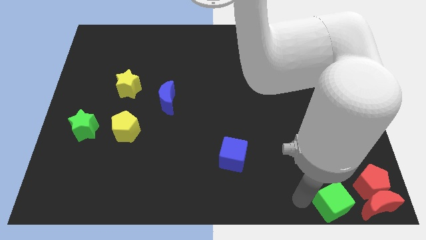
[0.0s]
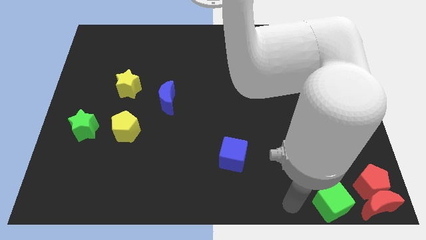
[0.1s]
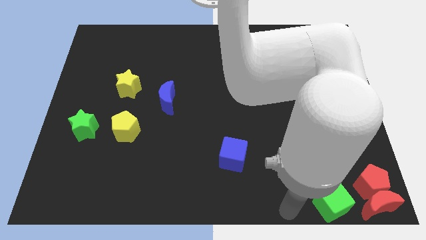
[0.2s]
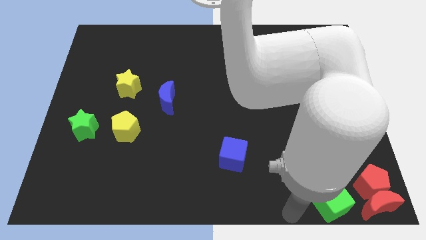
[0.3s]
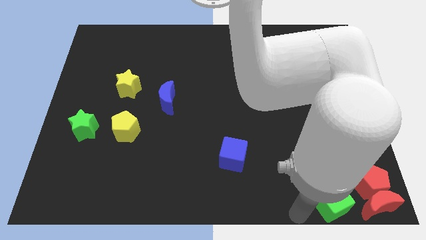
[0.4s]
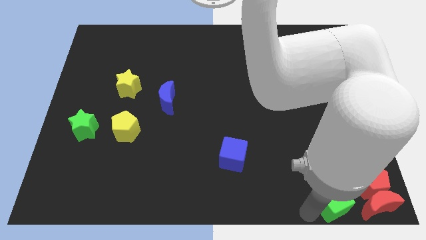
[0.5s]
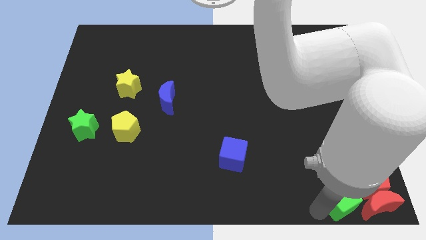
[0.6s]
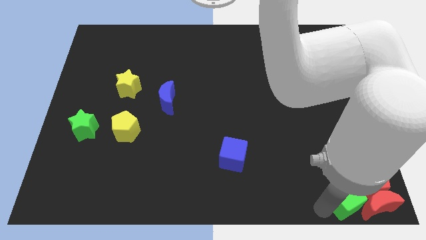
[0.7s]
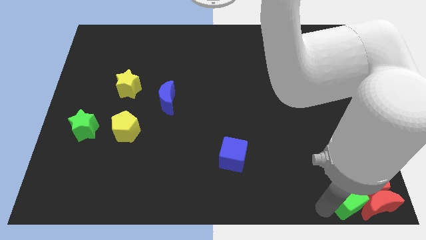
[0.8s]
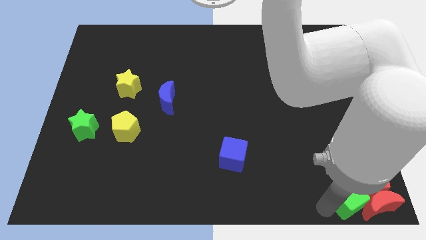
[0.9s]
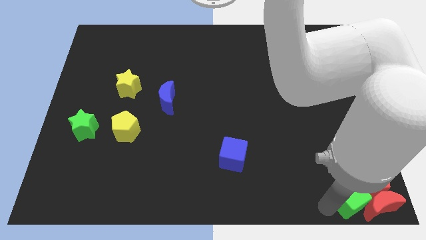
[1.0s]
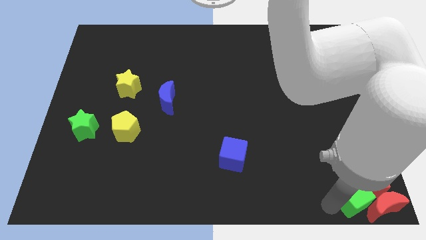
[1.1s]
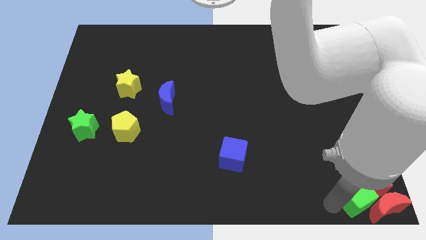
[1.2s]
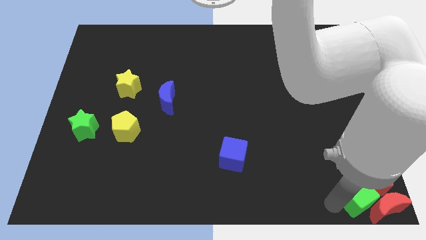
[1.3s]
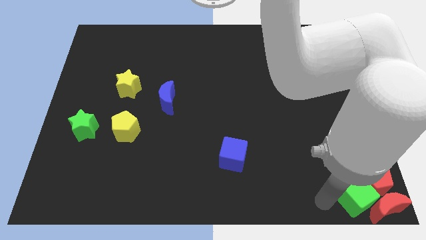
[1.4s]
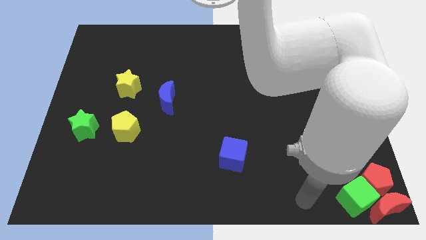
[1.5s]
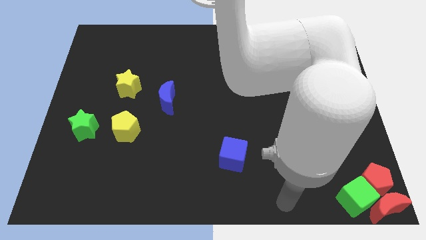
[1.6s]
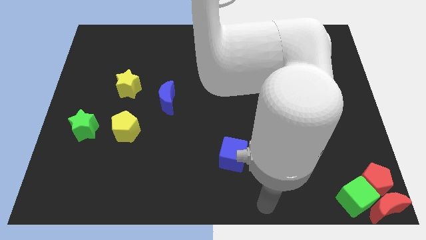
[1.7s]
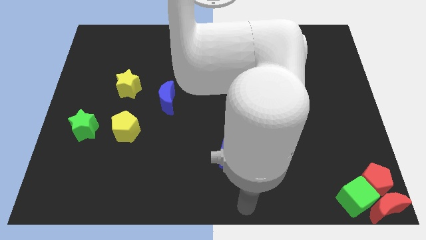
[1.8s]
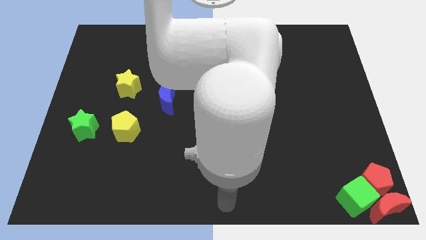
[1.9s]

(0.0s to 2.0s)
push the green cube into the red blocks

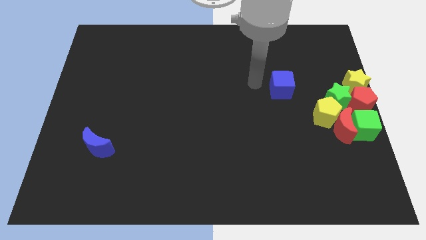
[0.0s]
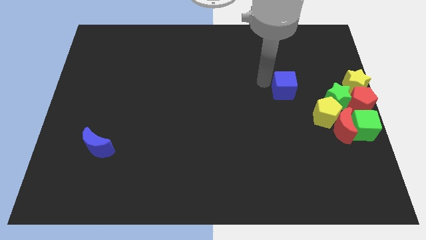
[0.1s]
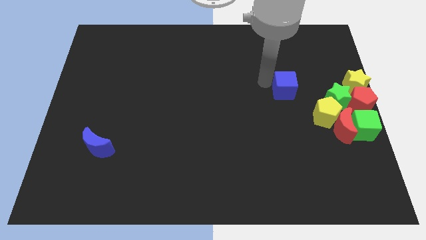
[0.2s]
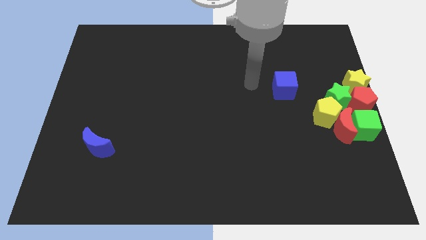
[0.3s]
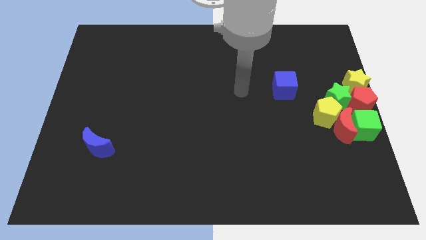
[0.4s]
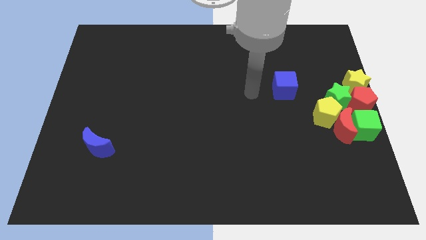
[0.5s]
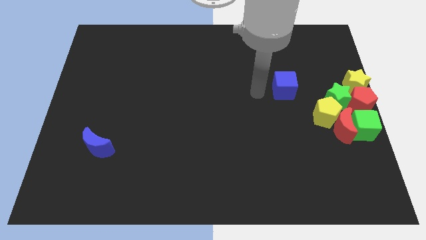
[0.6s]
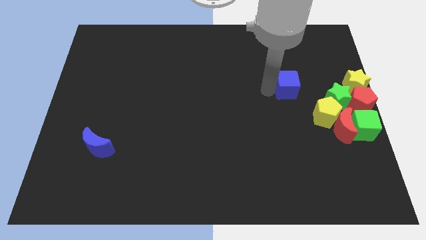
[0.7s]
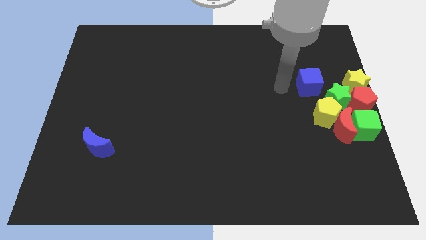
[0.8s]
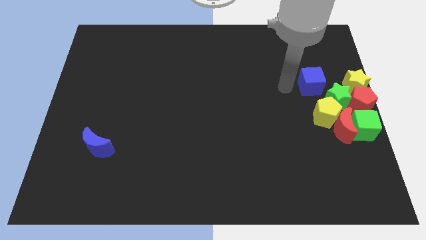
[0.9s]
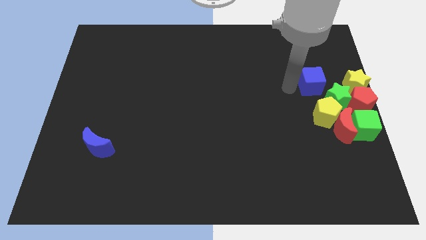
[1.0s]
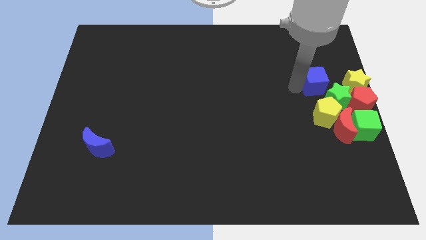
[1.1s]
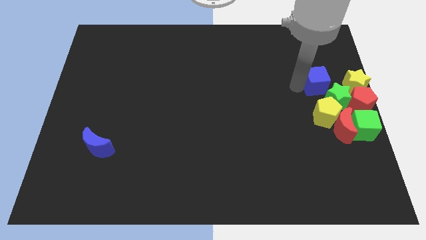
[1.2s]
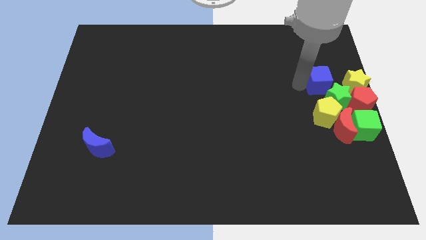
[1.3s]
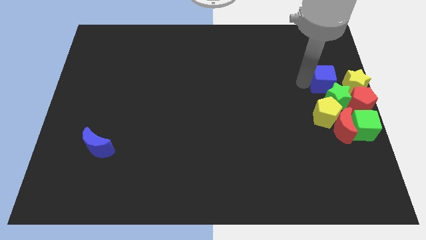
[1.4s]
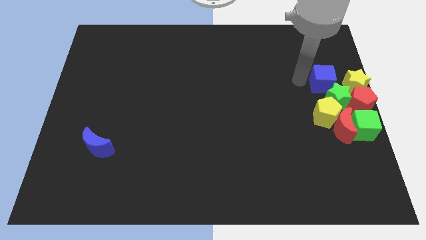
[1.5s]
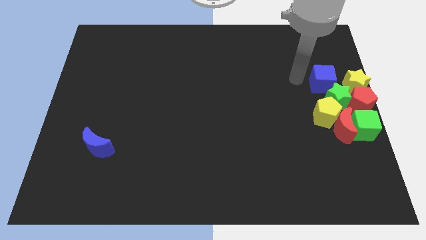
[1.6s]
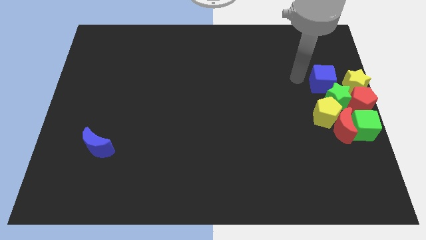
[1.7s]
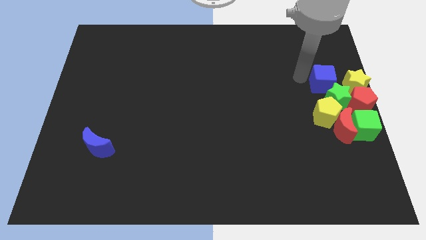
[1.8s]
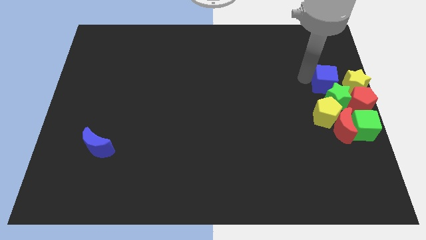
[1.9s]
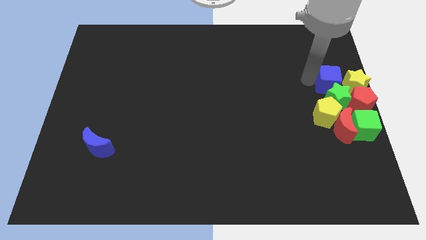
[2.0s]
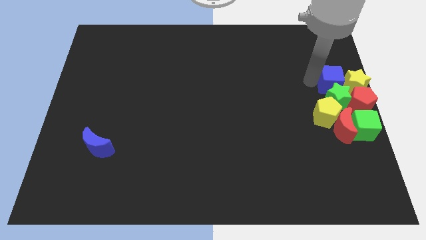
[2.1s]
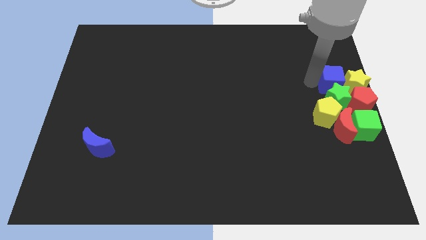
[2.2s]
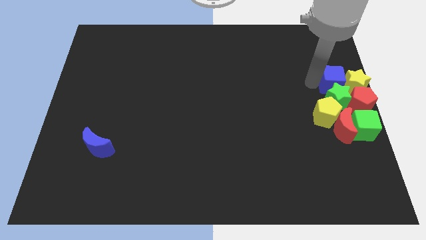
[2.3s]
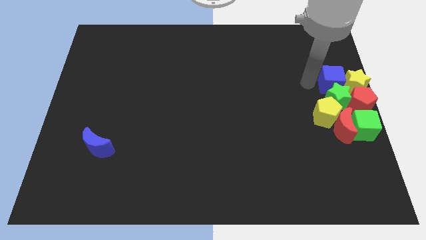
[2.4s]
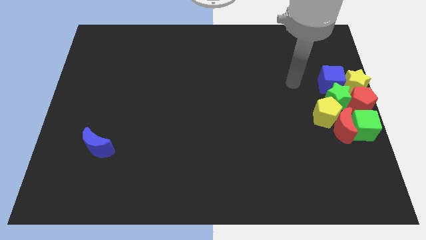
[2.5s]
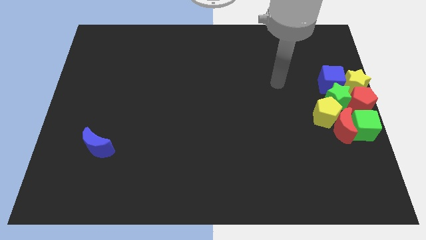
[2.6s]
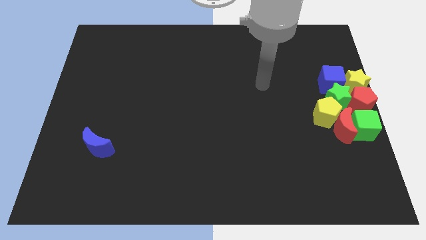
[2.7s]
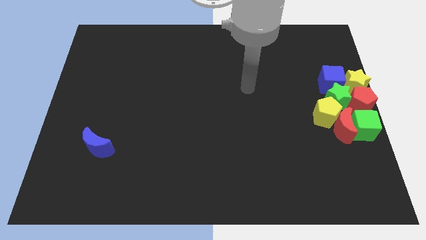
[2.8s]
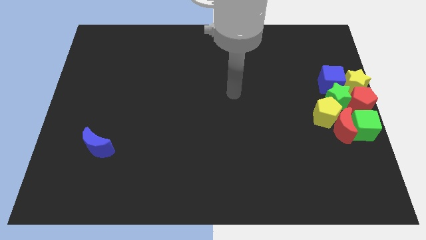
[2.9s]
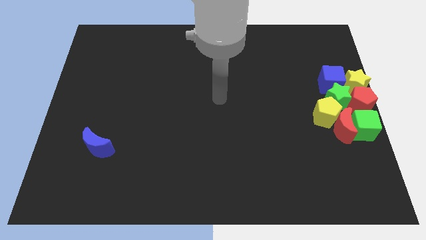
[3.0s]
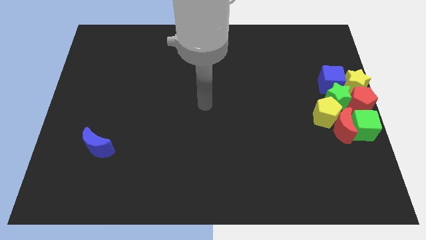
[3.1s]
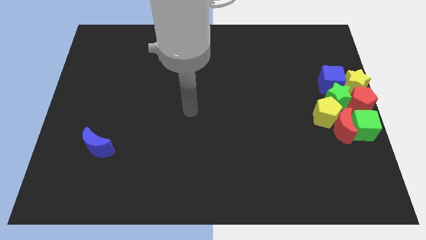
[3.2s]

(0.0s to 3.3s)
place the blue cube to the left side of the yellow star

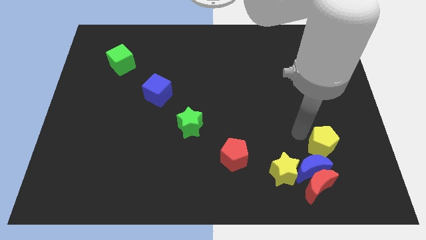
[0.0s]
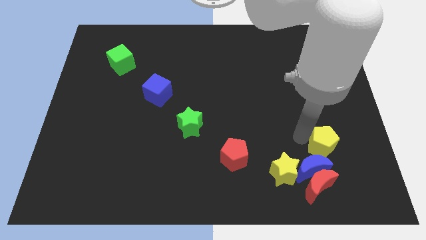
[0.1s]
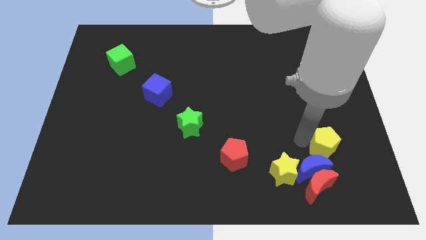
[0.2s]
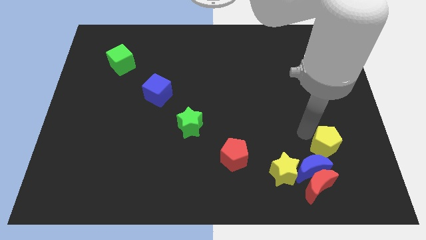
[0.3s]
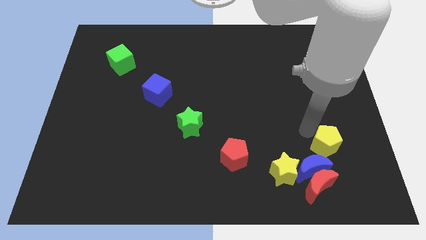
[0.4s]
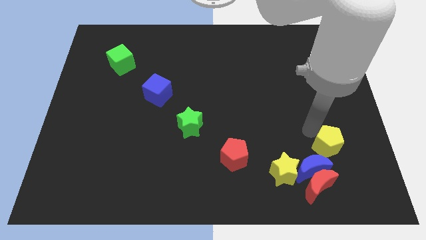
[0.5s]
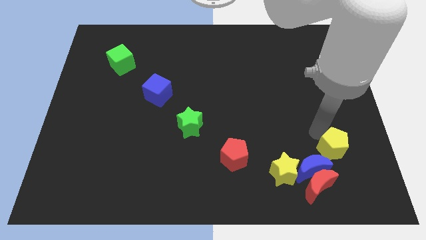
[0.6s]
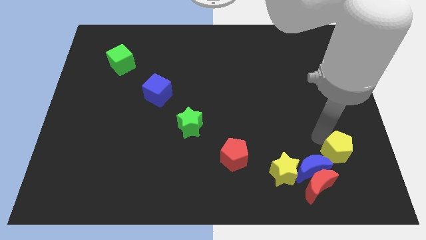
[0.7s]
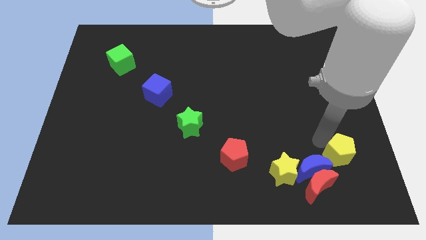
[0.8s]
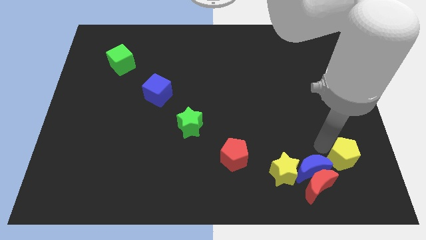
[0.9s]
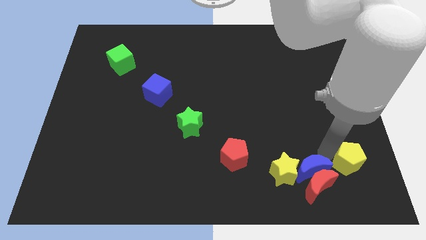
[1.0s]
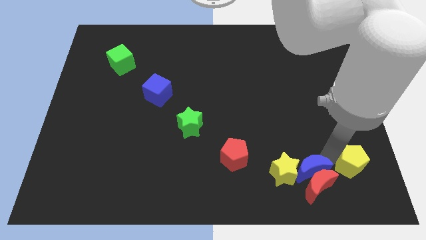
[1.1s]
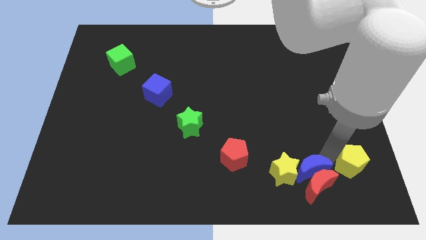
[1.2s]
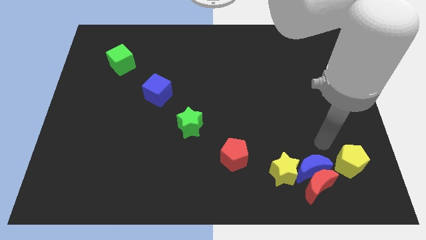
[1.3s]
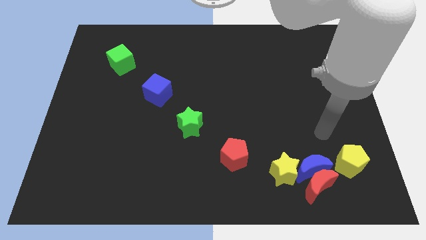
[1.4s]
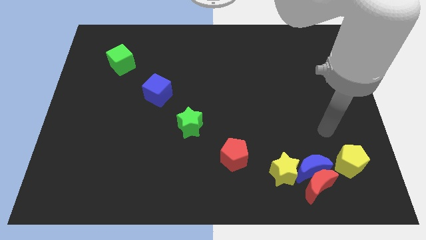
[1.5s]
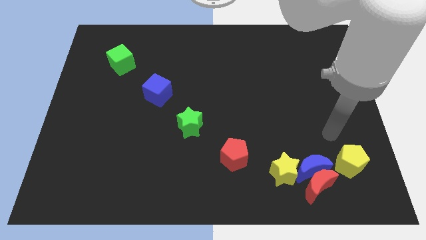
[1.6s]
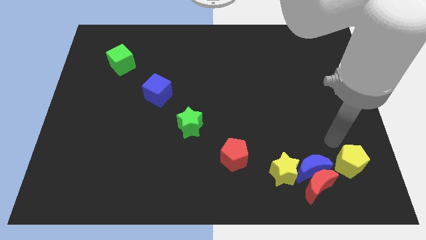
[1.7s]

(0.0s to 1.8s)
move the yellow pentagon to the right of the blue and red crescents

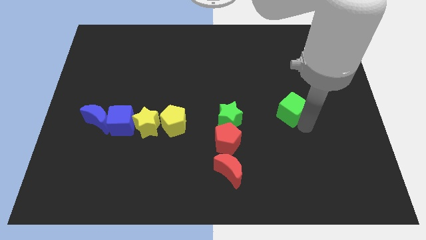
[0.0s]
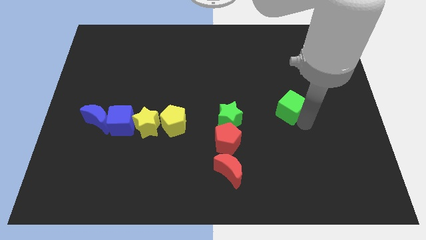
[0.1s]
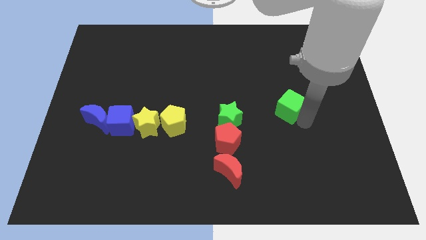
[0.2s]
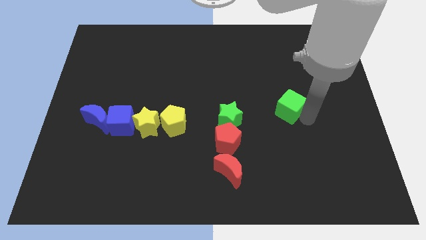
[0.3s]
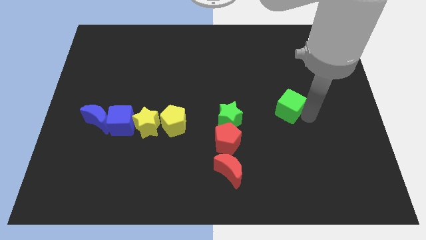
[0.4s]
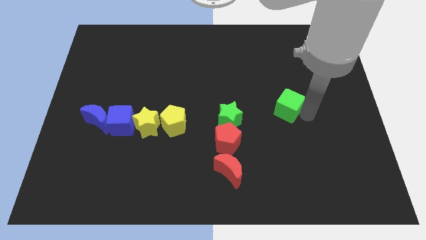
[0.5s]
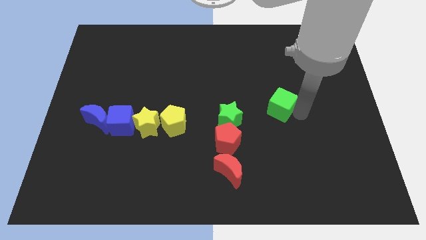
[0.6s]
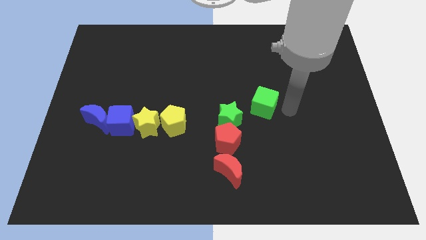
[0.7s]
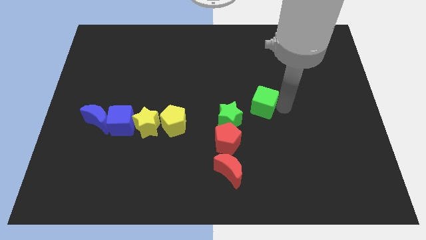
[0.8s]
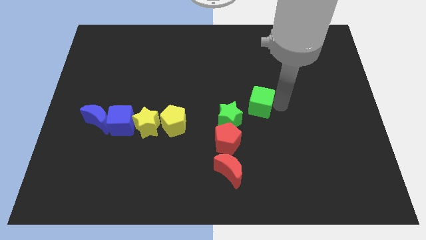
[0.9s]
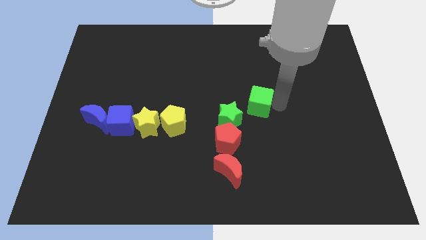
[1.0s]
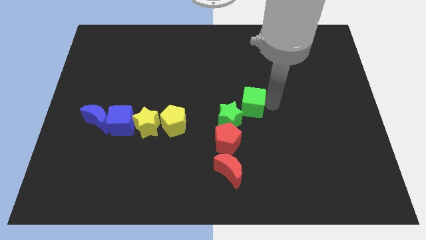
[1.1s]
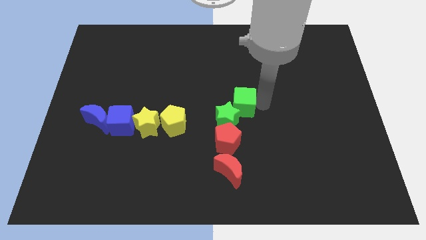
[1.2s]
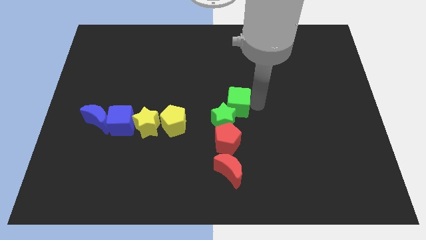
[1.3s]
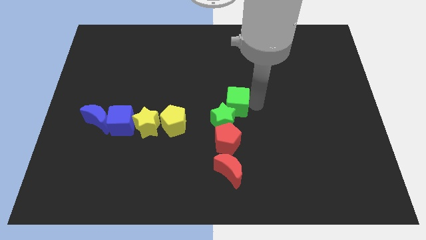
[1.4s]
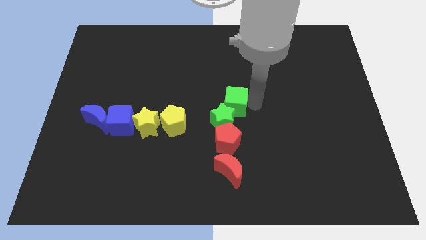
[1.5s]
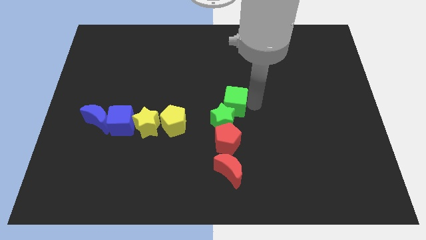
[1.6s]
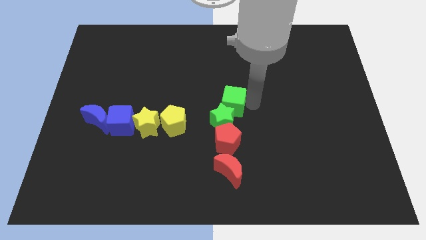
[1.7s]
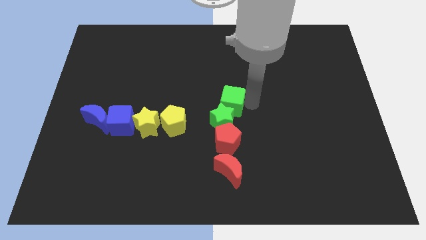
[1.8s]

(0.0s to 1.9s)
move the green cube on top of the green star
